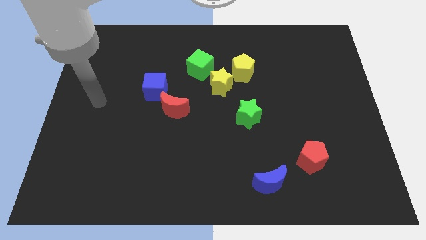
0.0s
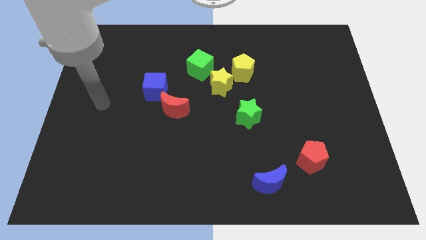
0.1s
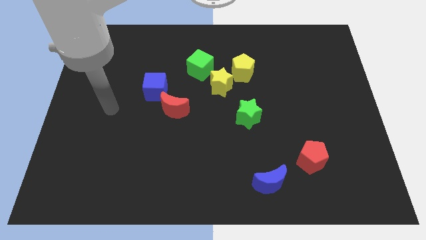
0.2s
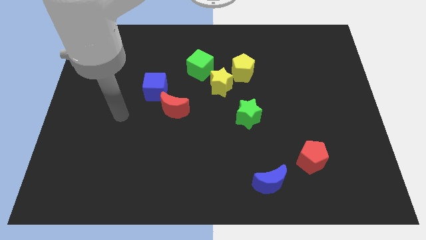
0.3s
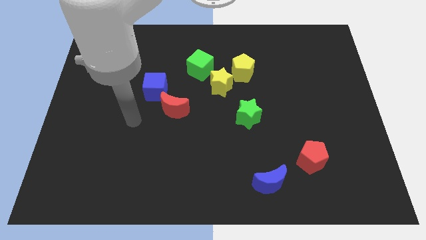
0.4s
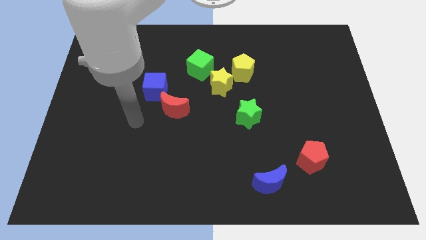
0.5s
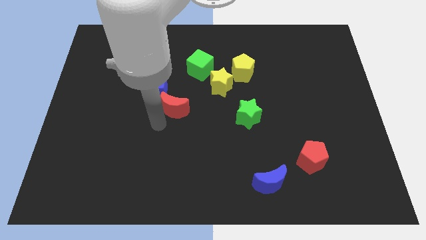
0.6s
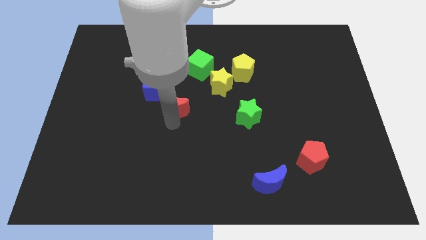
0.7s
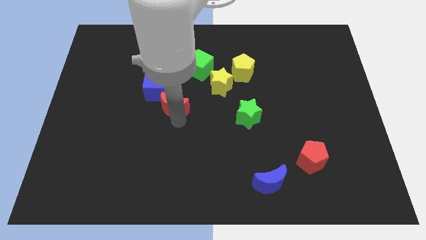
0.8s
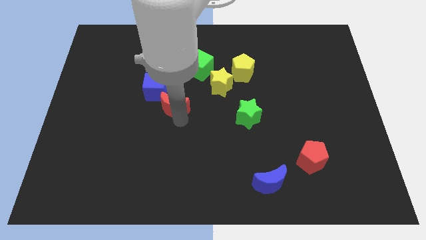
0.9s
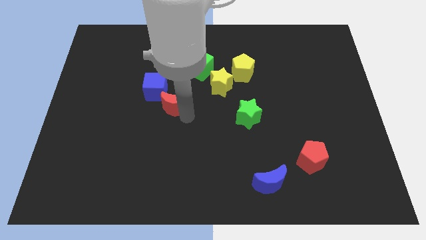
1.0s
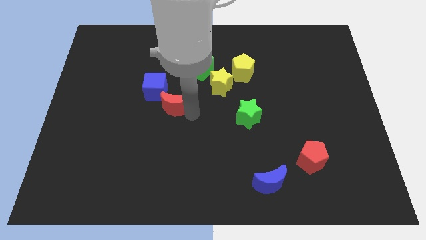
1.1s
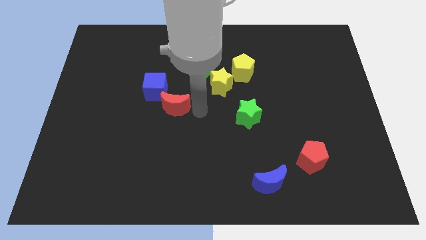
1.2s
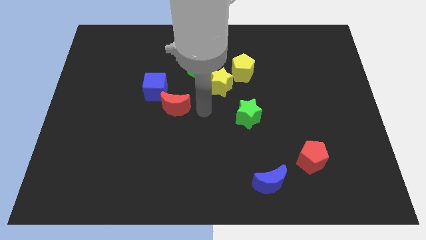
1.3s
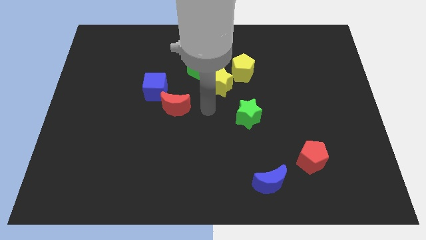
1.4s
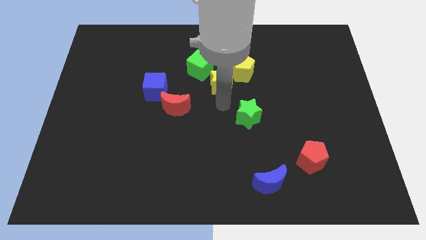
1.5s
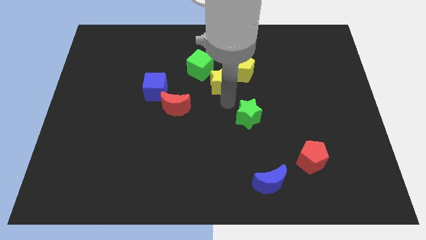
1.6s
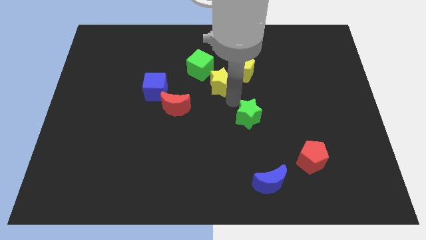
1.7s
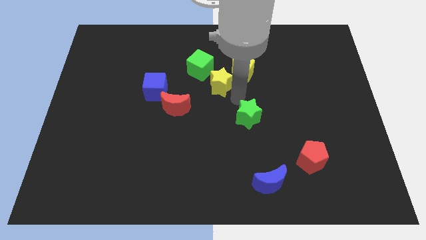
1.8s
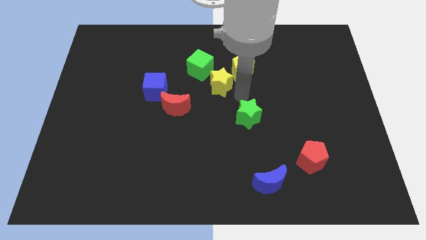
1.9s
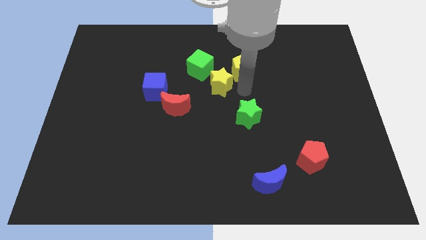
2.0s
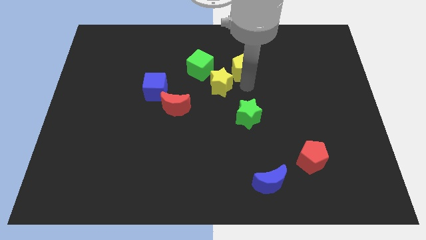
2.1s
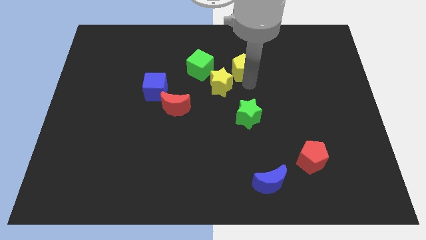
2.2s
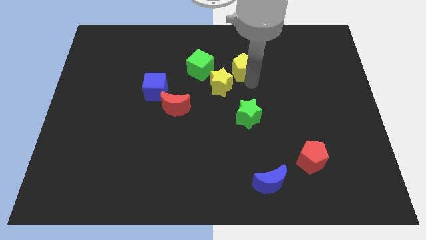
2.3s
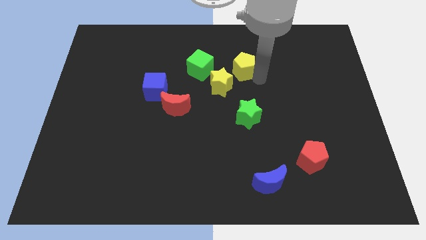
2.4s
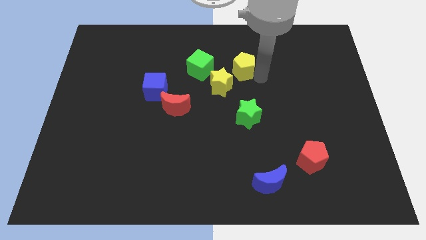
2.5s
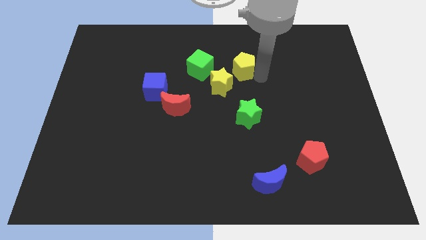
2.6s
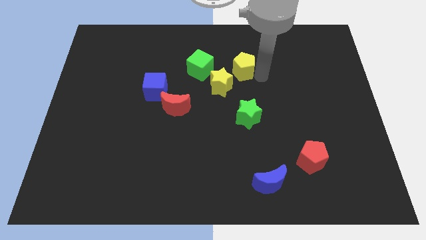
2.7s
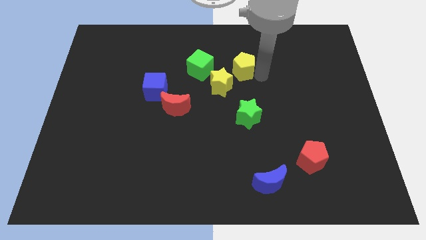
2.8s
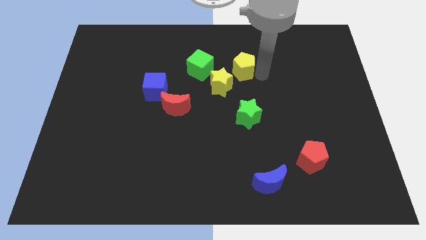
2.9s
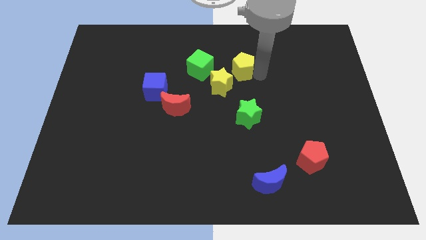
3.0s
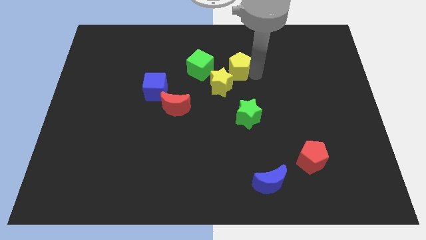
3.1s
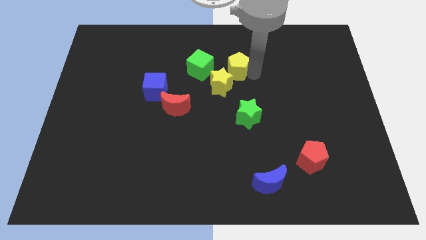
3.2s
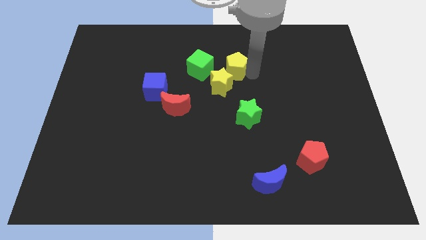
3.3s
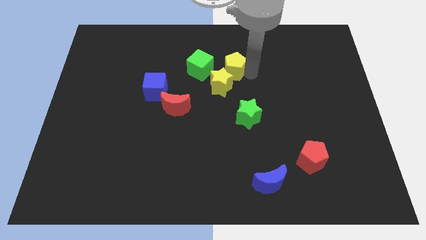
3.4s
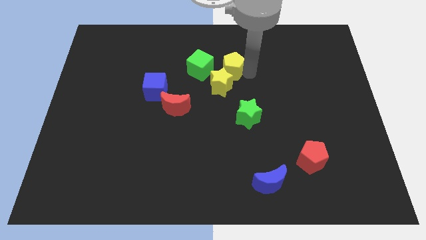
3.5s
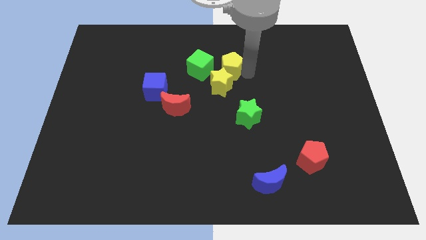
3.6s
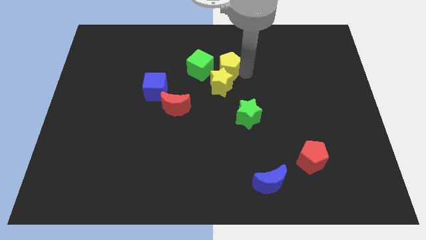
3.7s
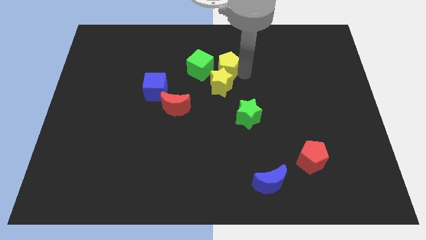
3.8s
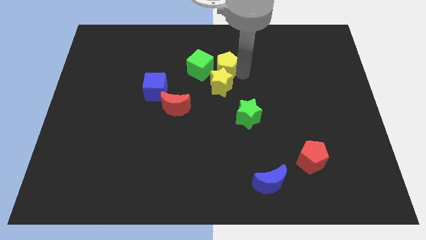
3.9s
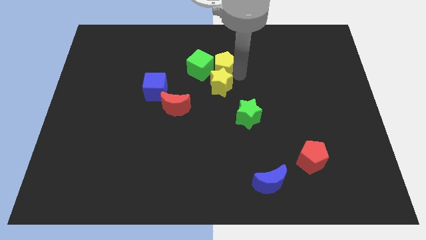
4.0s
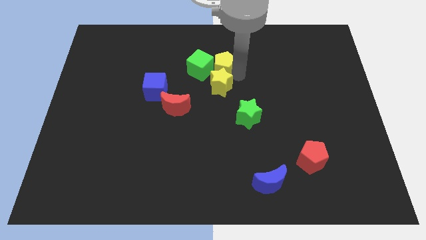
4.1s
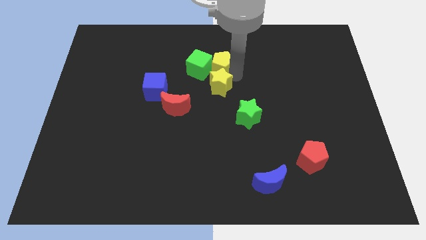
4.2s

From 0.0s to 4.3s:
put the yellow pentagon next to the green cube

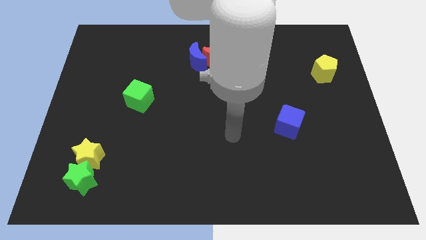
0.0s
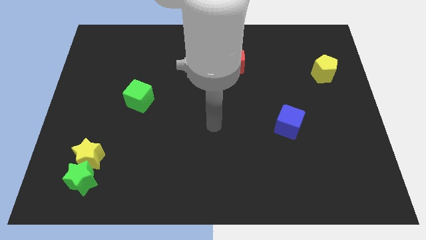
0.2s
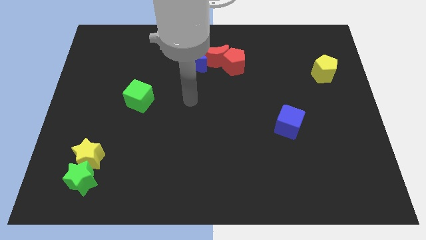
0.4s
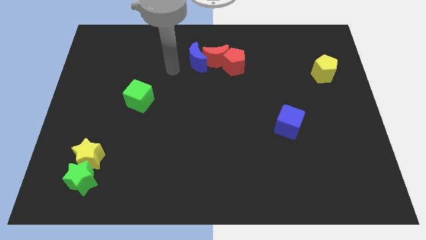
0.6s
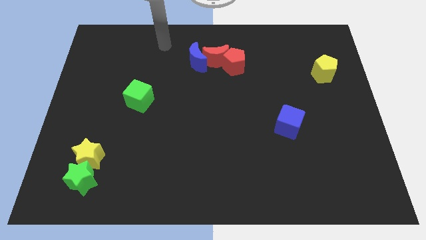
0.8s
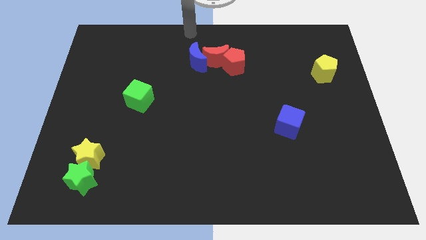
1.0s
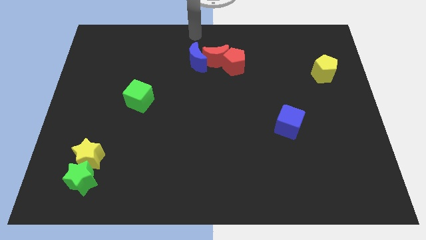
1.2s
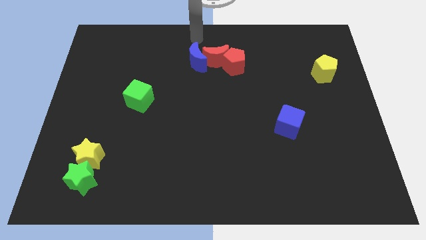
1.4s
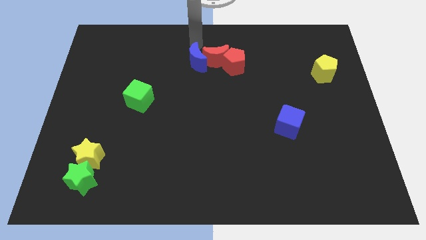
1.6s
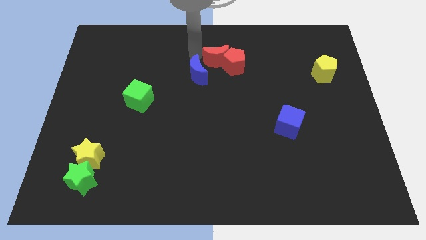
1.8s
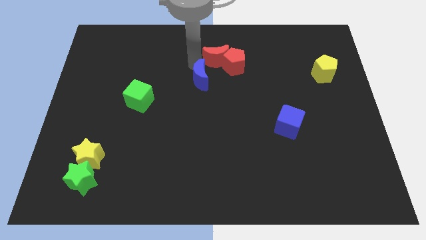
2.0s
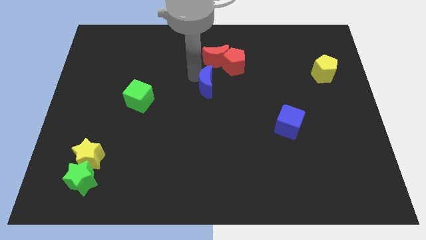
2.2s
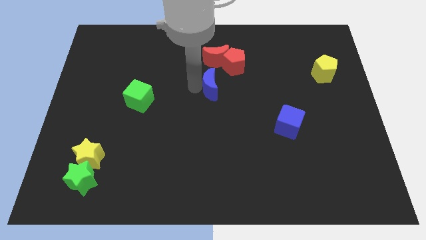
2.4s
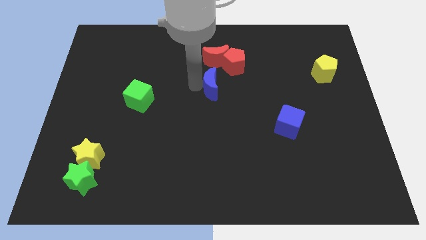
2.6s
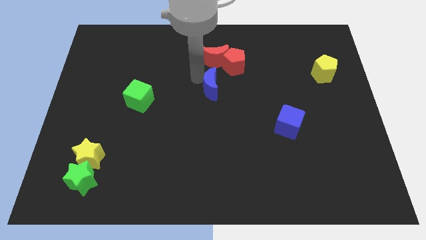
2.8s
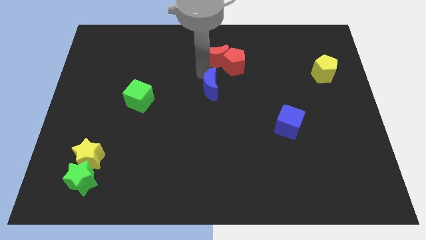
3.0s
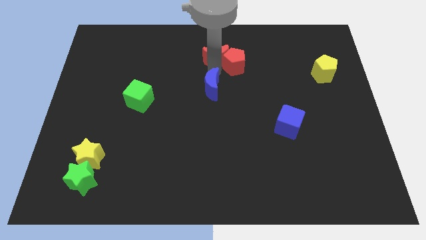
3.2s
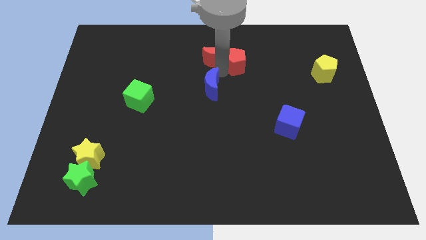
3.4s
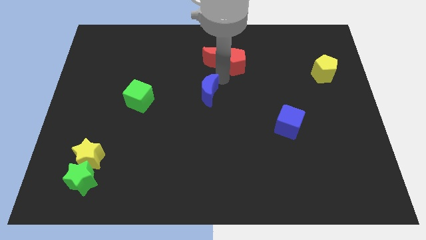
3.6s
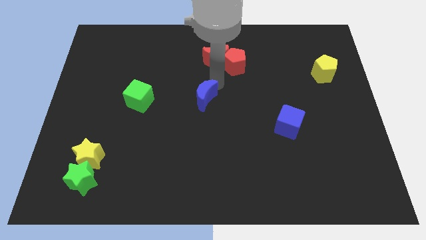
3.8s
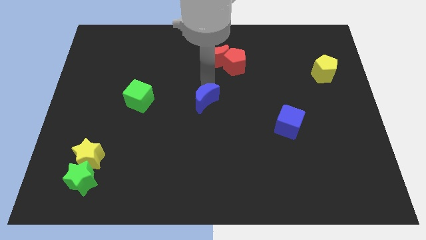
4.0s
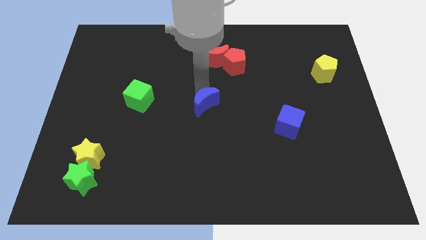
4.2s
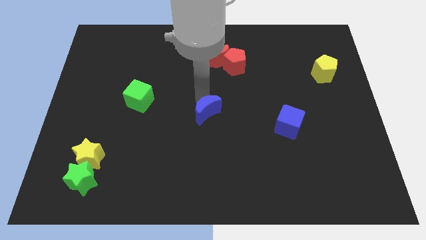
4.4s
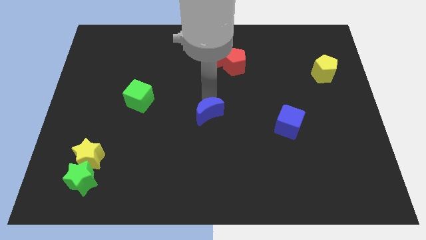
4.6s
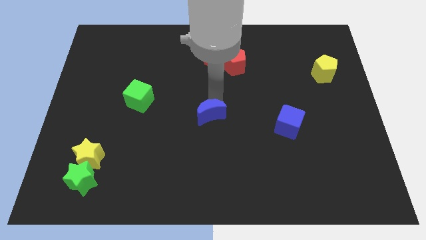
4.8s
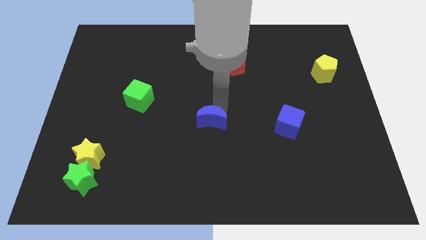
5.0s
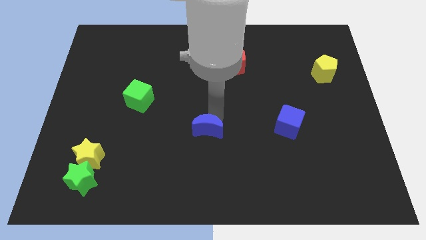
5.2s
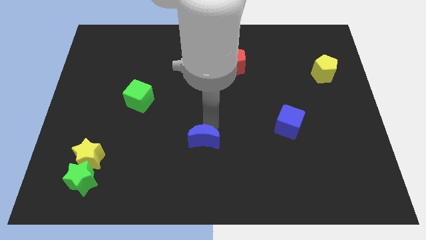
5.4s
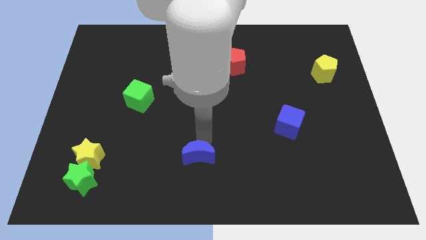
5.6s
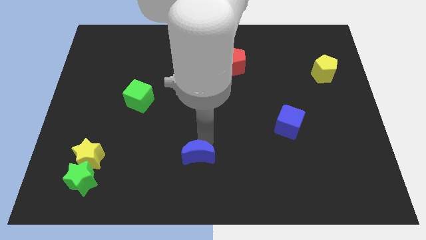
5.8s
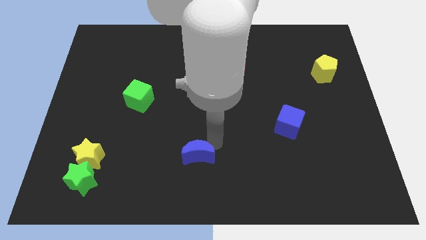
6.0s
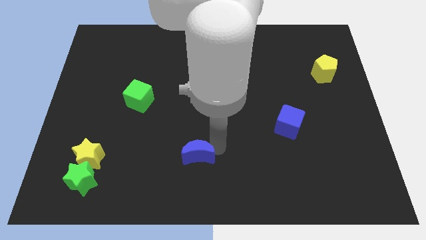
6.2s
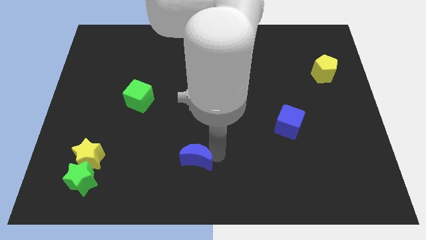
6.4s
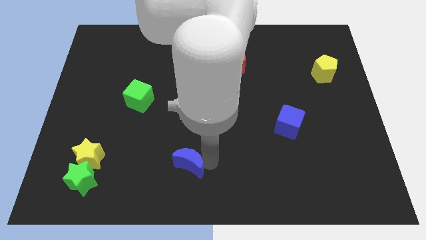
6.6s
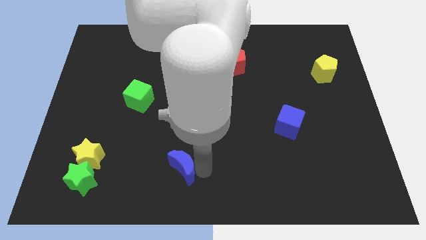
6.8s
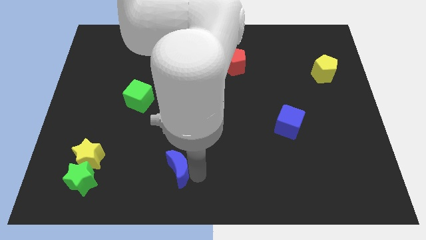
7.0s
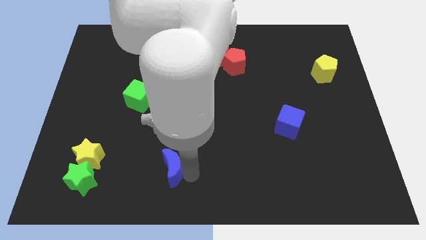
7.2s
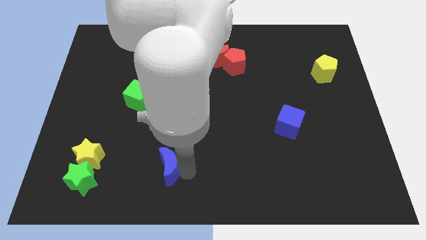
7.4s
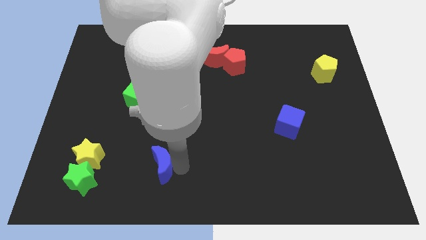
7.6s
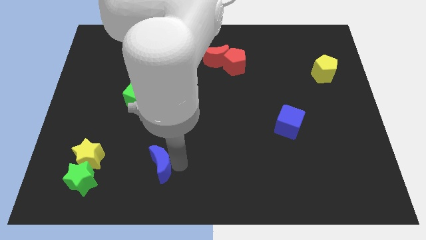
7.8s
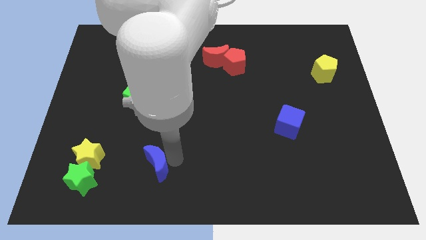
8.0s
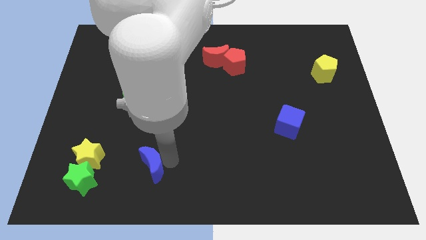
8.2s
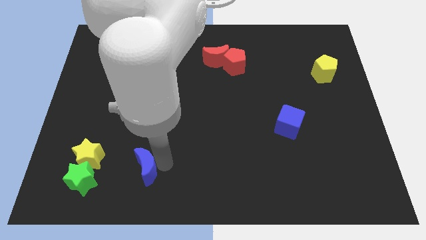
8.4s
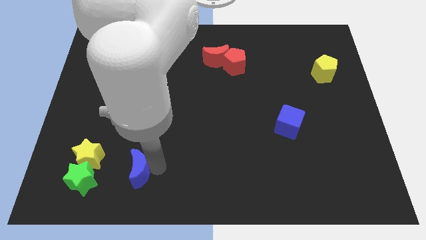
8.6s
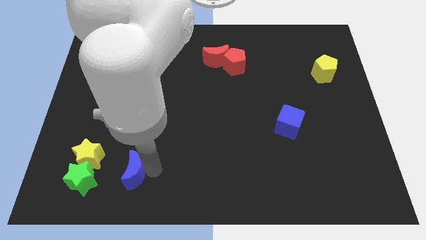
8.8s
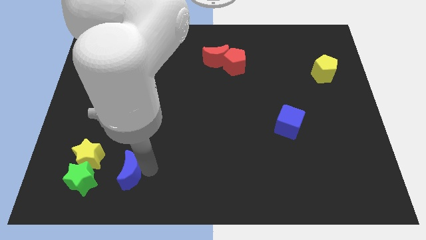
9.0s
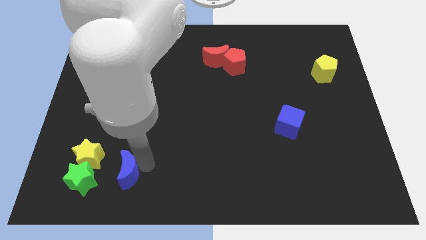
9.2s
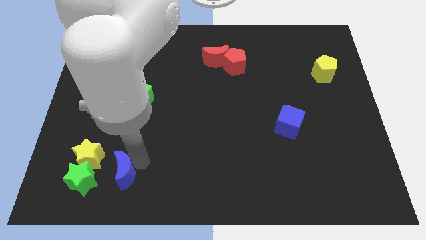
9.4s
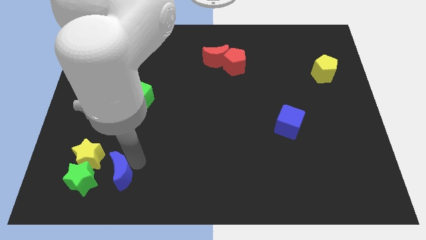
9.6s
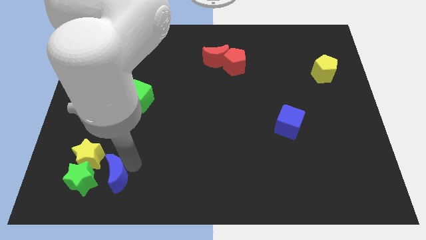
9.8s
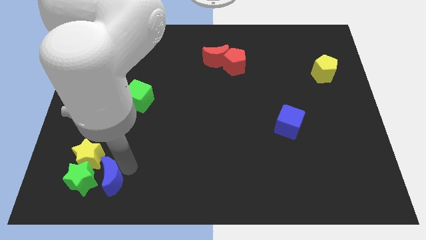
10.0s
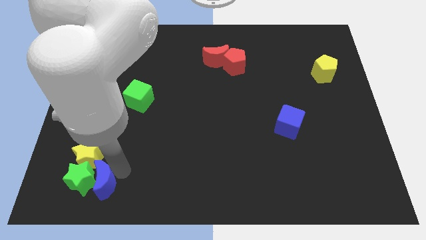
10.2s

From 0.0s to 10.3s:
push the blue moon close to the green star
